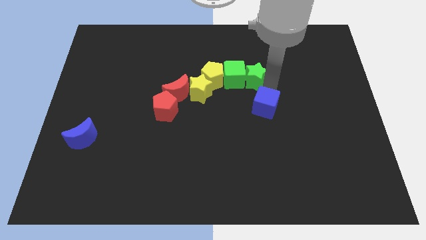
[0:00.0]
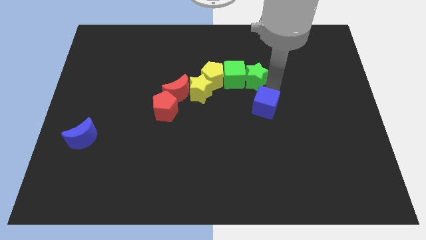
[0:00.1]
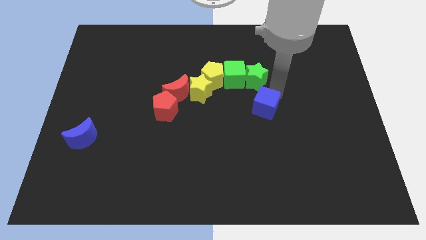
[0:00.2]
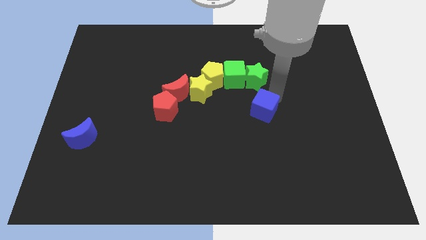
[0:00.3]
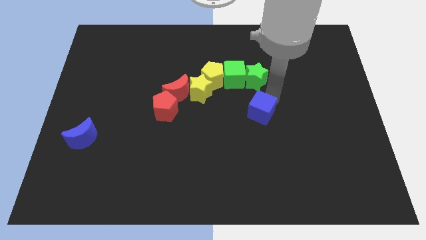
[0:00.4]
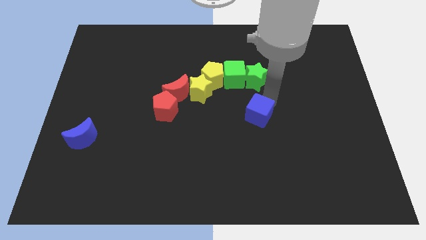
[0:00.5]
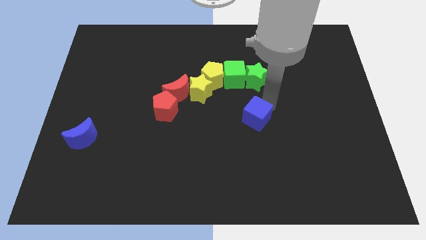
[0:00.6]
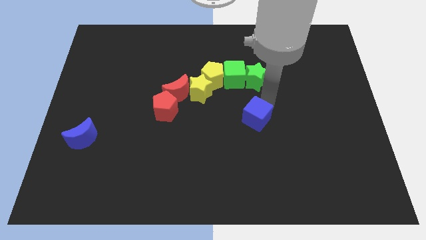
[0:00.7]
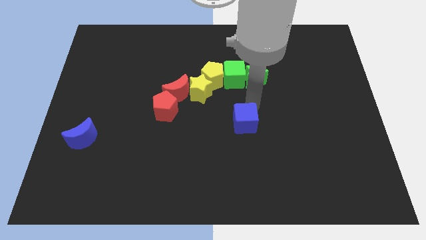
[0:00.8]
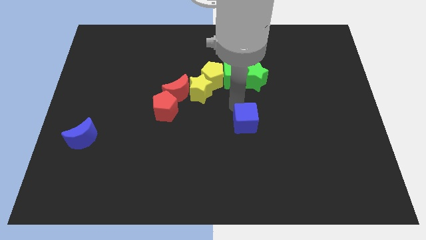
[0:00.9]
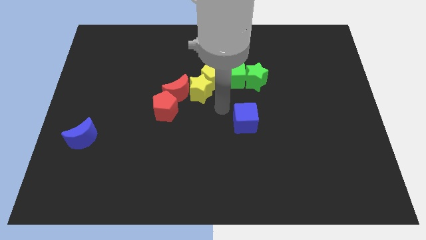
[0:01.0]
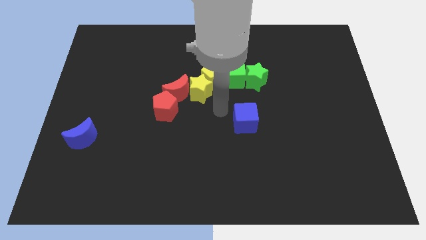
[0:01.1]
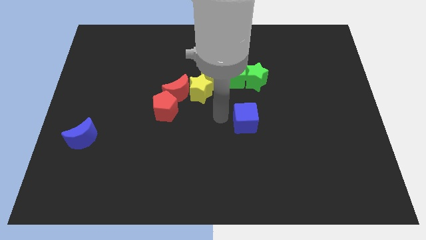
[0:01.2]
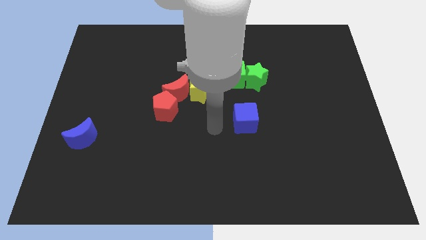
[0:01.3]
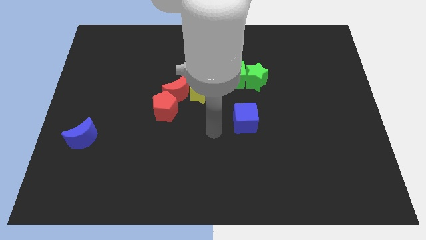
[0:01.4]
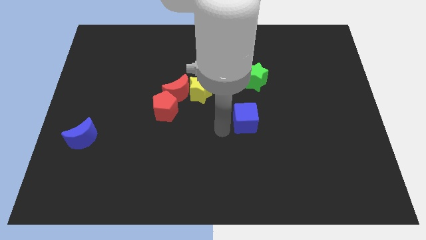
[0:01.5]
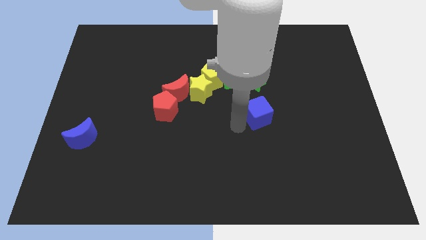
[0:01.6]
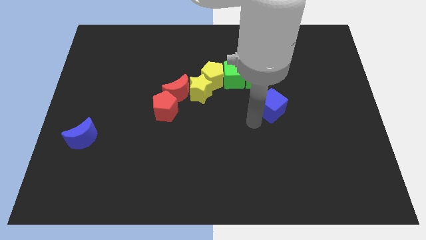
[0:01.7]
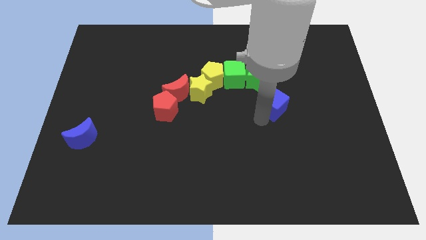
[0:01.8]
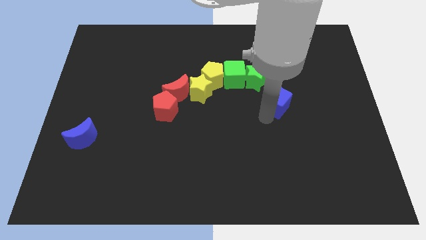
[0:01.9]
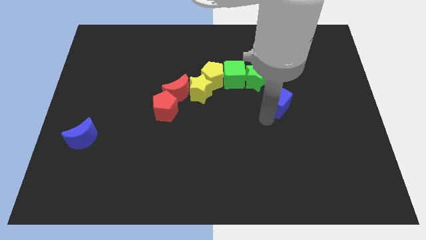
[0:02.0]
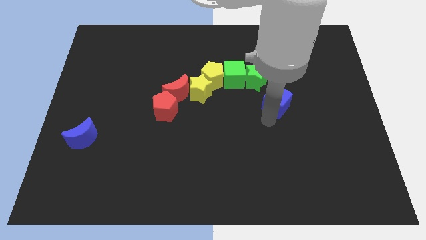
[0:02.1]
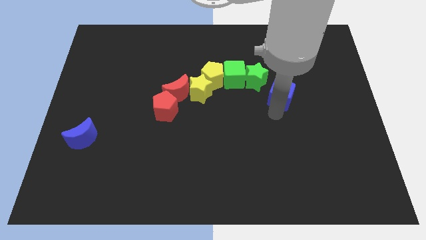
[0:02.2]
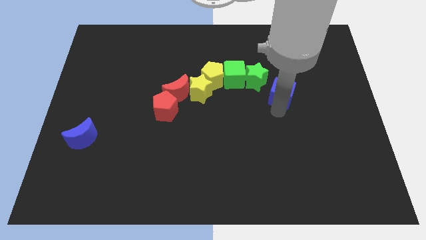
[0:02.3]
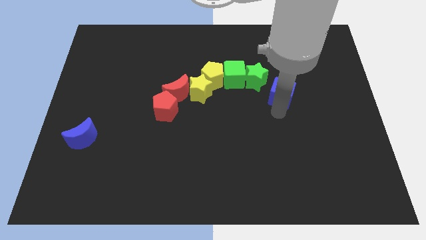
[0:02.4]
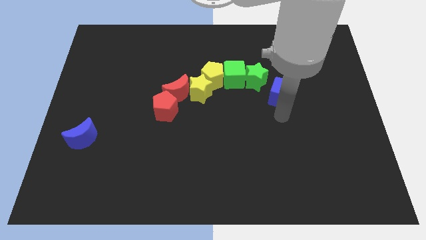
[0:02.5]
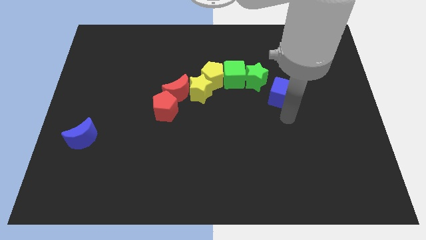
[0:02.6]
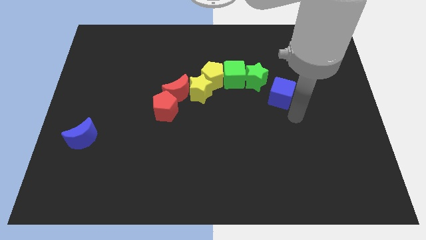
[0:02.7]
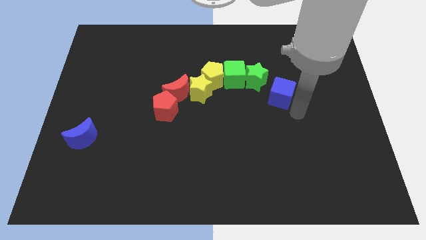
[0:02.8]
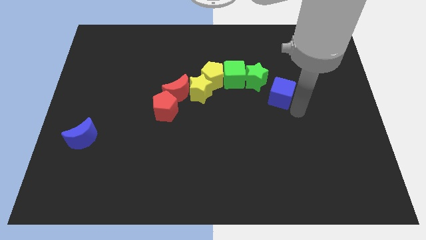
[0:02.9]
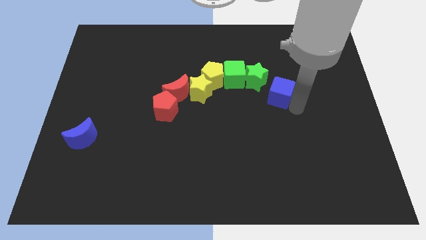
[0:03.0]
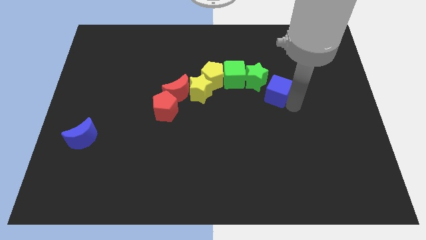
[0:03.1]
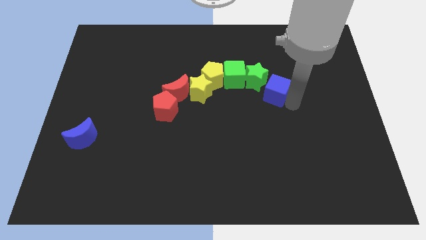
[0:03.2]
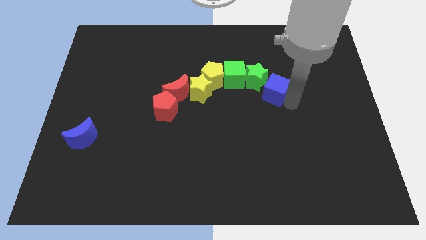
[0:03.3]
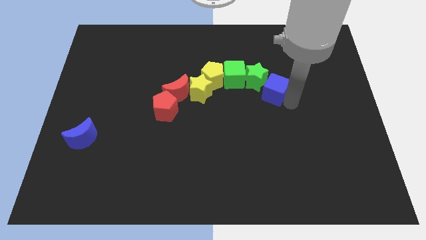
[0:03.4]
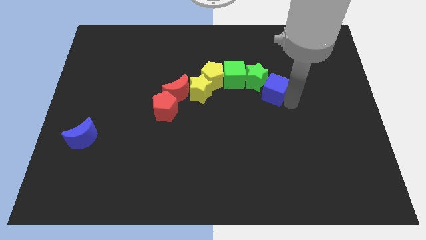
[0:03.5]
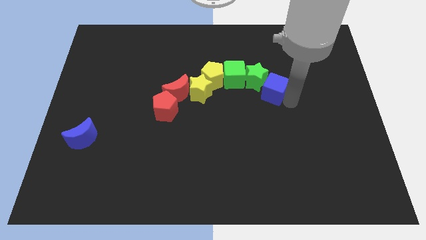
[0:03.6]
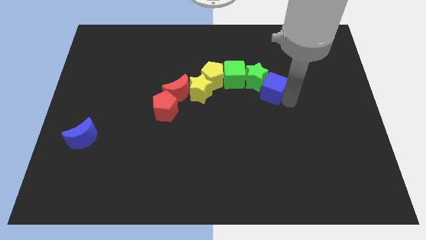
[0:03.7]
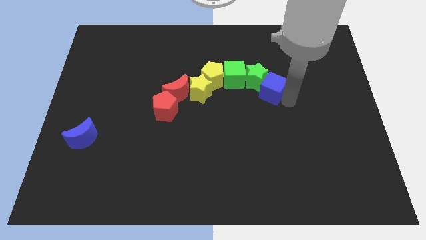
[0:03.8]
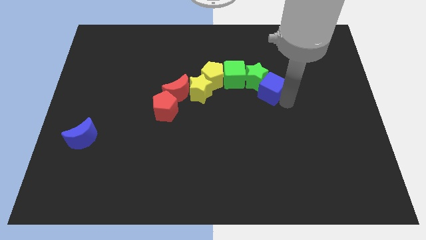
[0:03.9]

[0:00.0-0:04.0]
place the blue cube right to the green star

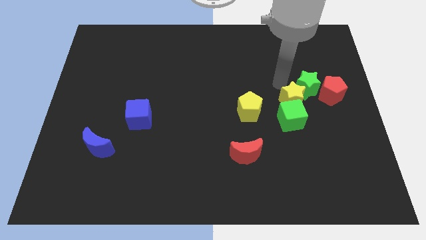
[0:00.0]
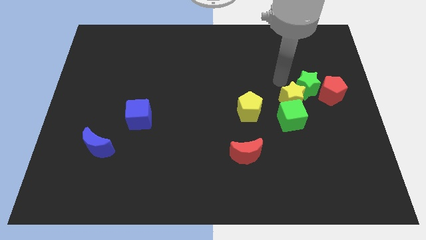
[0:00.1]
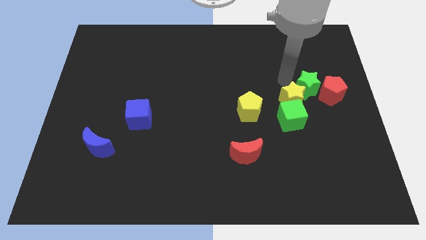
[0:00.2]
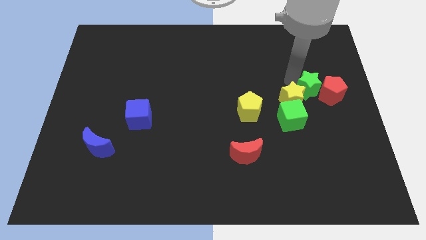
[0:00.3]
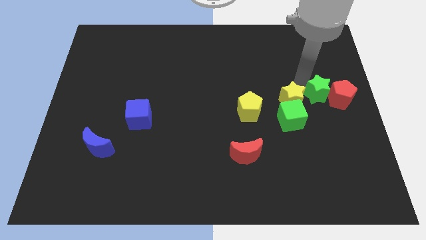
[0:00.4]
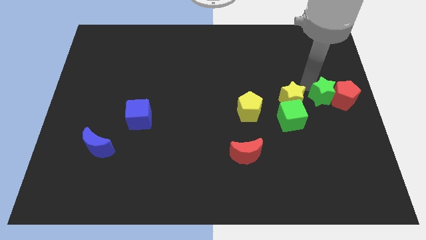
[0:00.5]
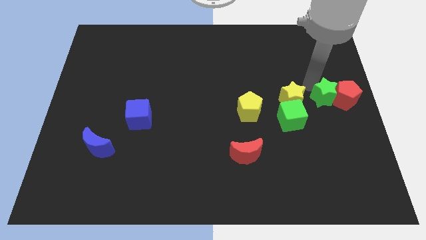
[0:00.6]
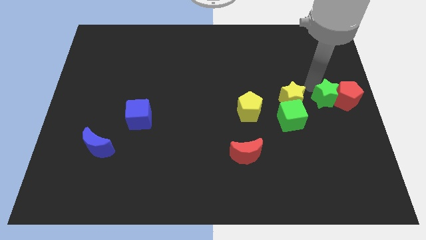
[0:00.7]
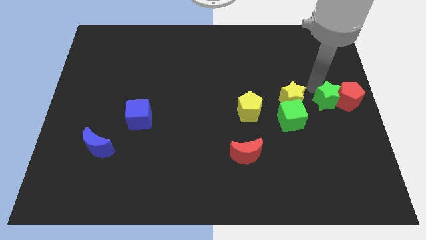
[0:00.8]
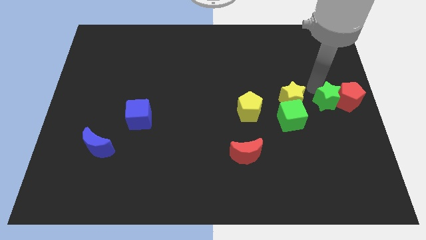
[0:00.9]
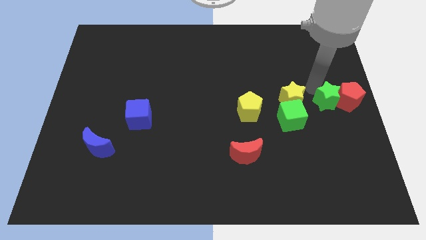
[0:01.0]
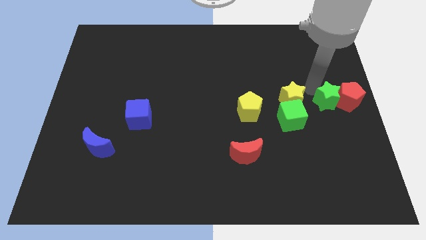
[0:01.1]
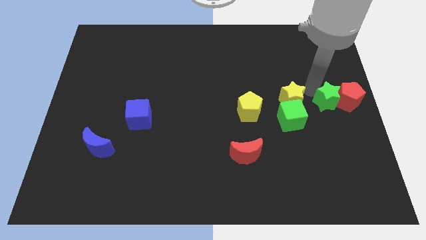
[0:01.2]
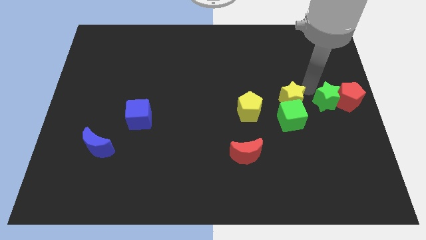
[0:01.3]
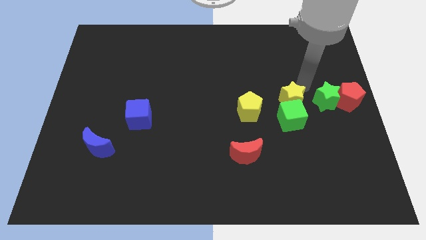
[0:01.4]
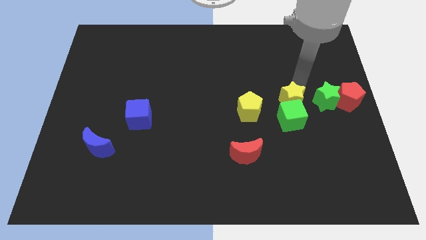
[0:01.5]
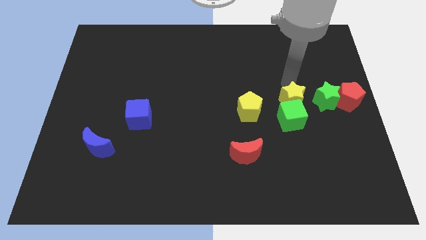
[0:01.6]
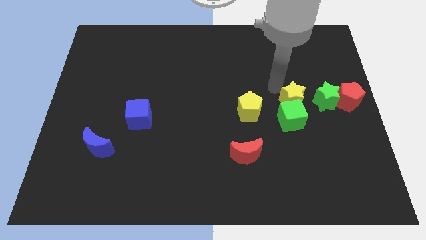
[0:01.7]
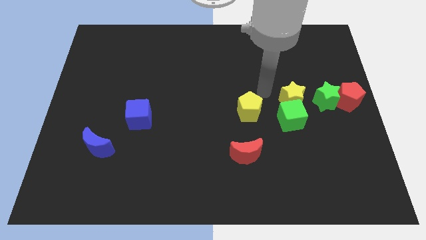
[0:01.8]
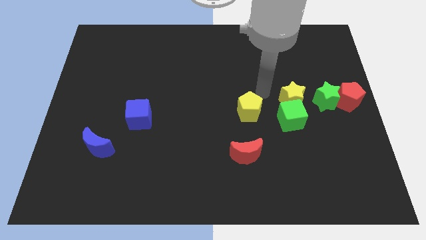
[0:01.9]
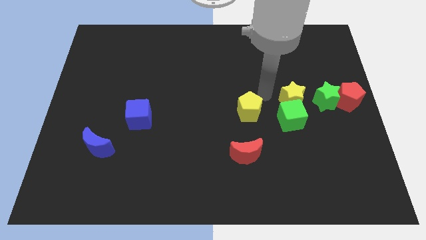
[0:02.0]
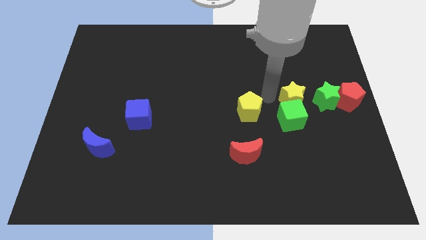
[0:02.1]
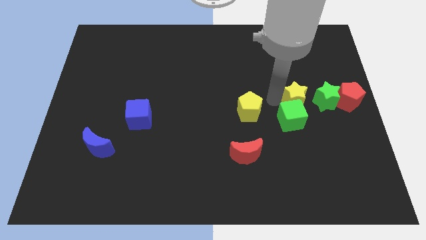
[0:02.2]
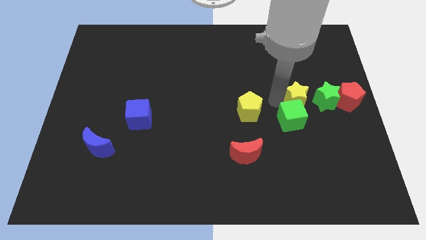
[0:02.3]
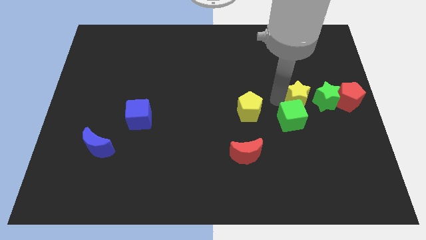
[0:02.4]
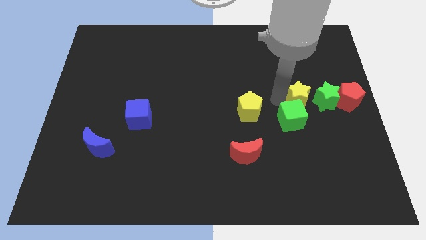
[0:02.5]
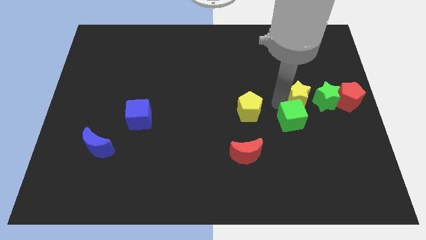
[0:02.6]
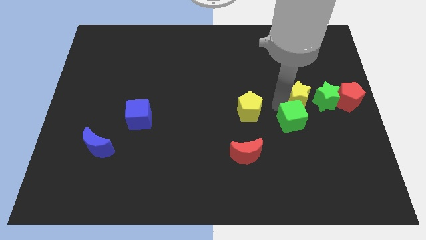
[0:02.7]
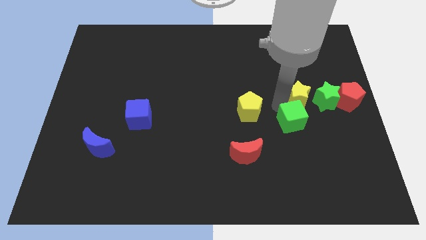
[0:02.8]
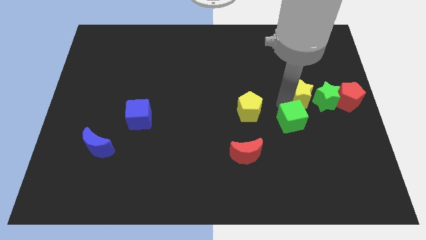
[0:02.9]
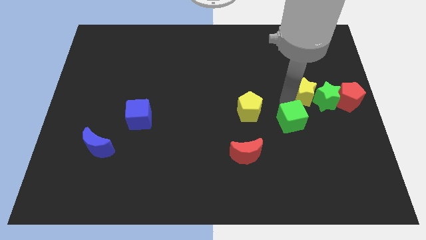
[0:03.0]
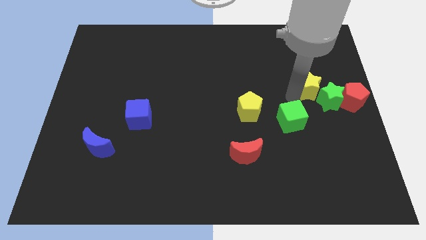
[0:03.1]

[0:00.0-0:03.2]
push the green star into the red pentagon

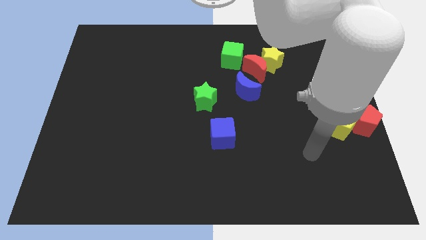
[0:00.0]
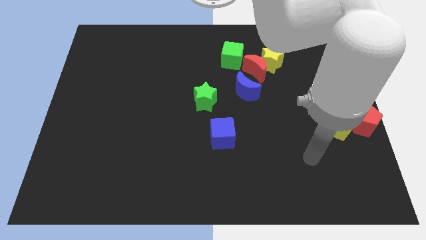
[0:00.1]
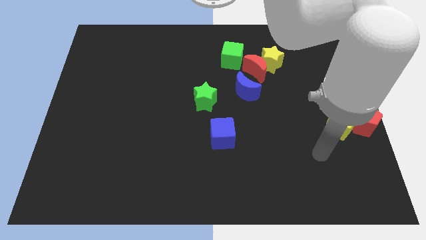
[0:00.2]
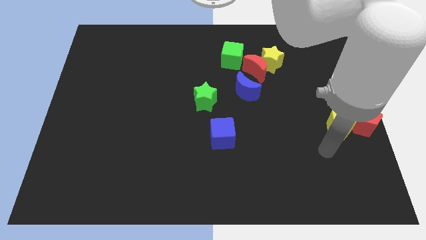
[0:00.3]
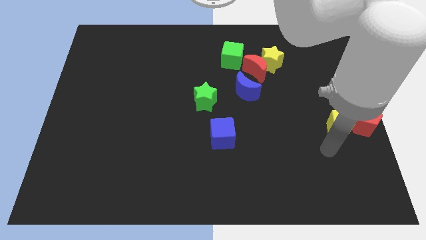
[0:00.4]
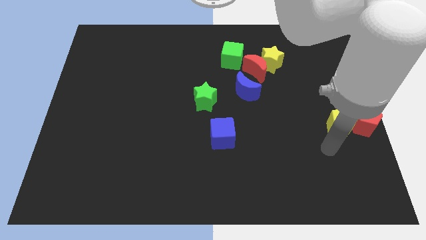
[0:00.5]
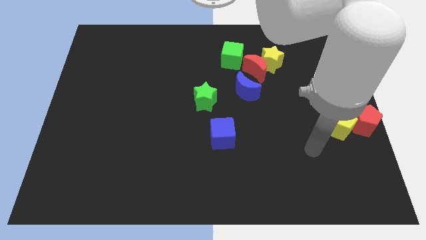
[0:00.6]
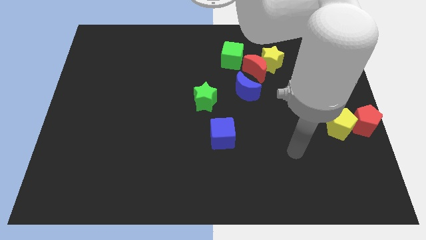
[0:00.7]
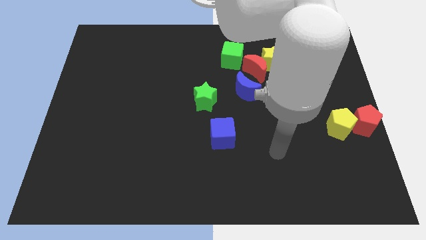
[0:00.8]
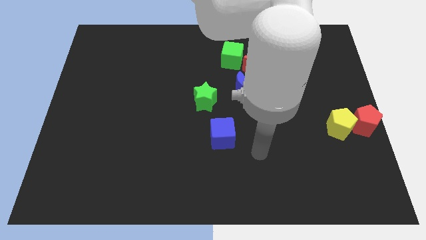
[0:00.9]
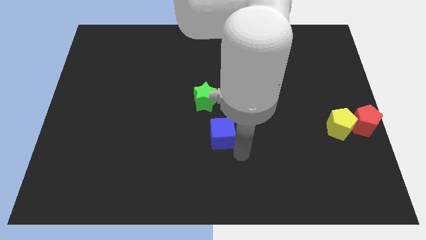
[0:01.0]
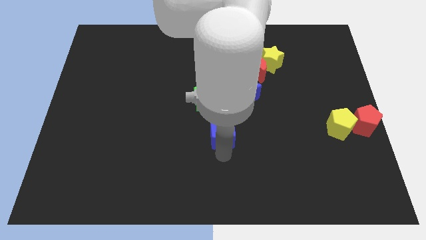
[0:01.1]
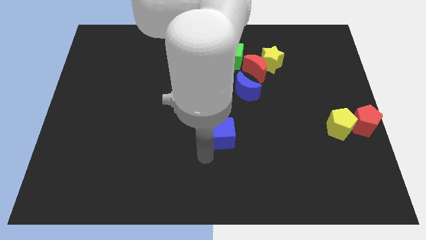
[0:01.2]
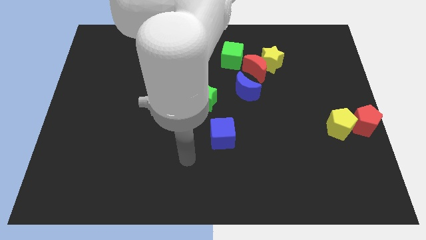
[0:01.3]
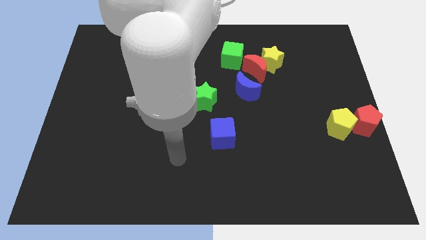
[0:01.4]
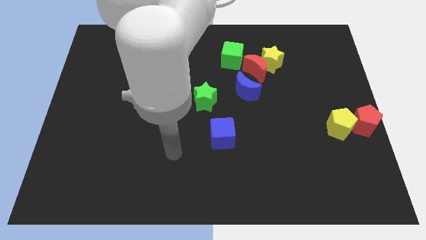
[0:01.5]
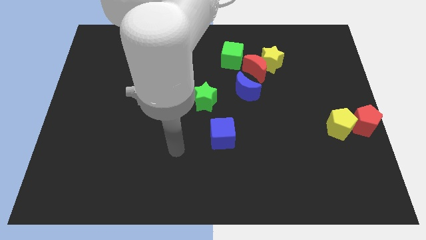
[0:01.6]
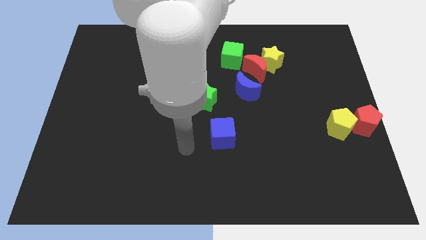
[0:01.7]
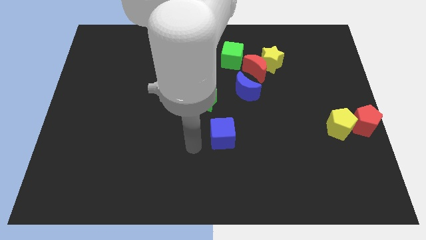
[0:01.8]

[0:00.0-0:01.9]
move the arm towards the blue cube
